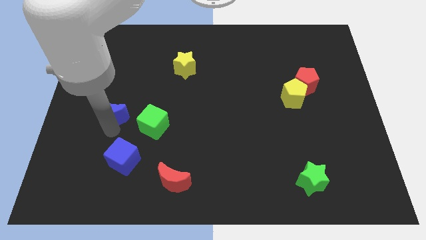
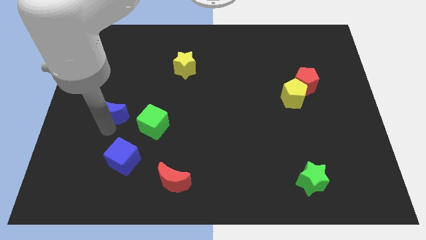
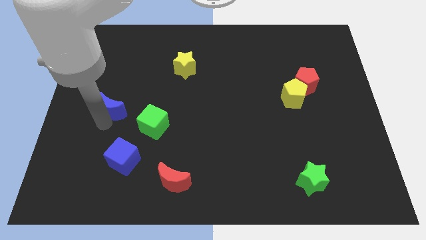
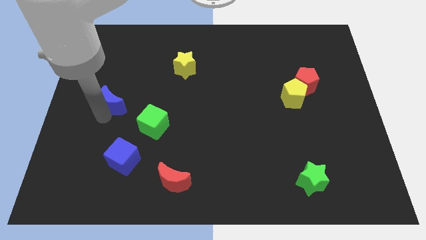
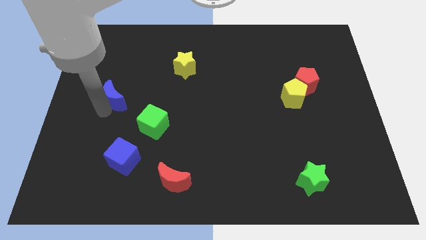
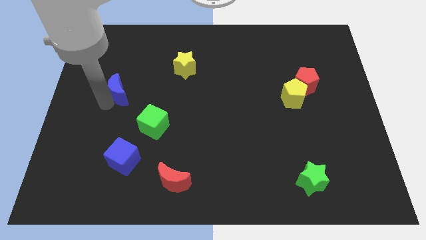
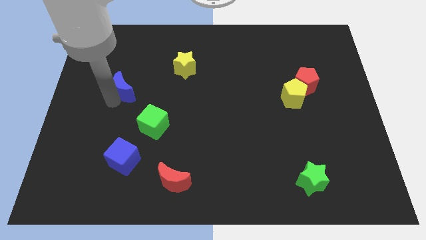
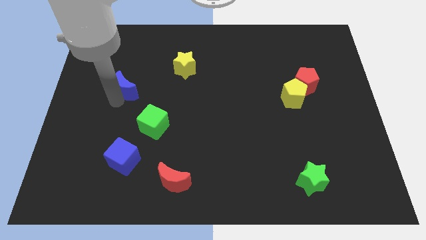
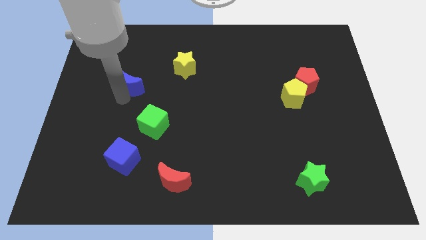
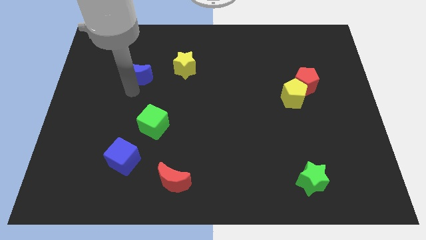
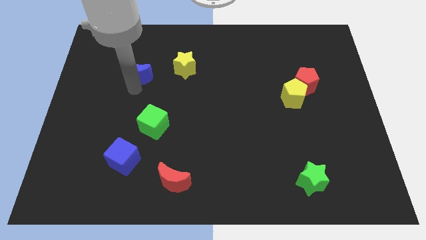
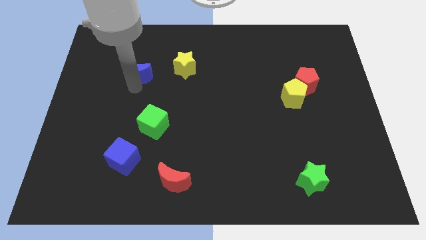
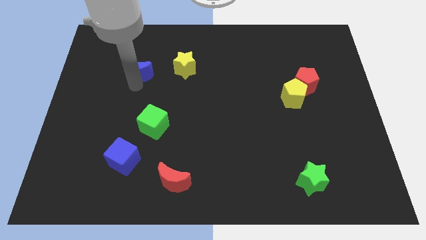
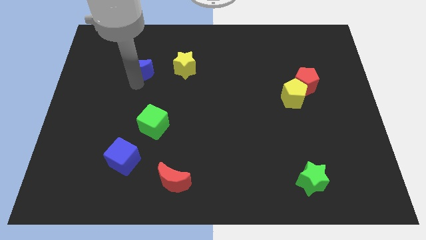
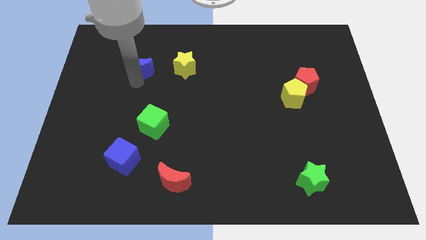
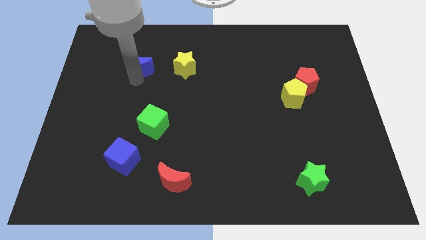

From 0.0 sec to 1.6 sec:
move blue moon to the left of the yellow star

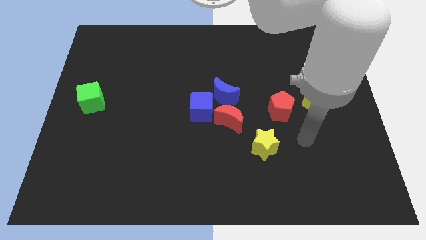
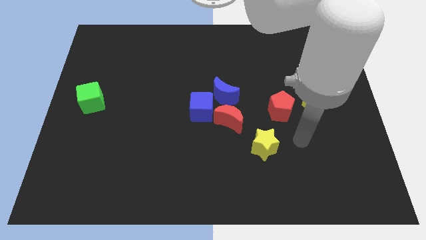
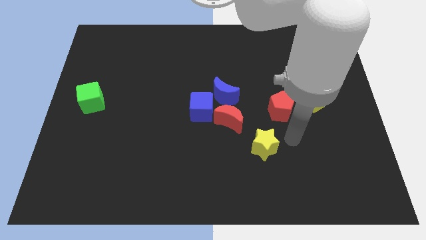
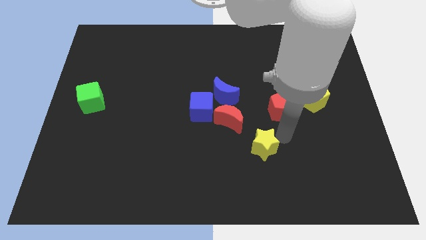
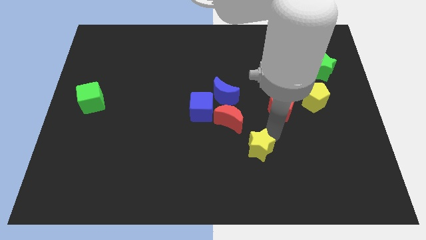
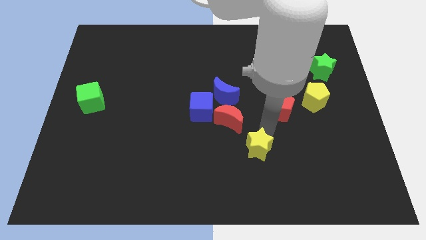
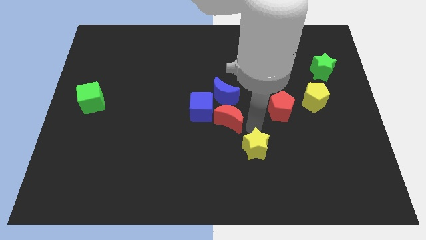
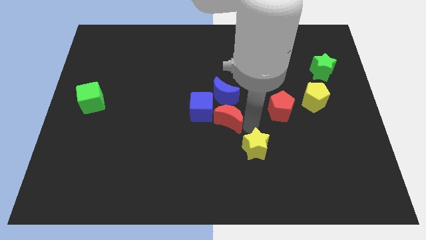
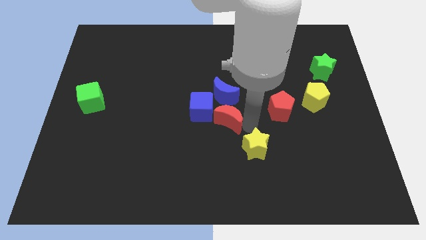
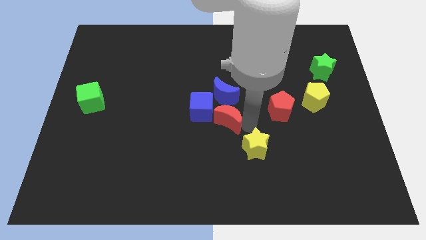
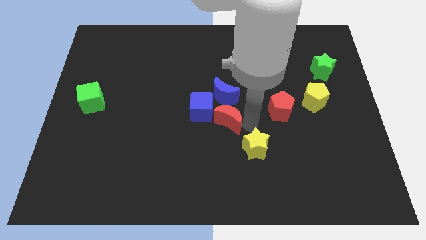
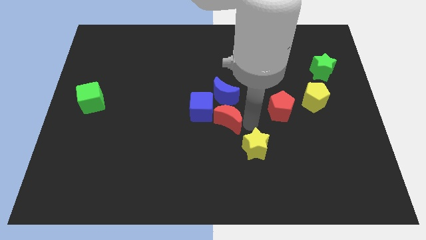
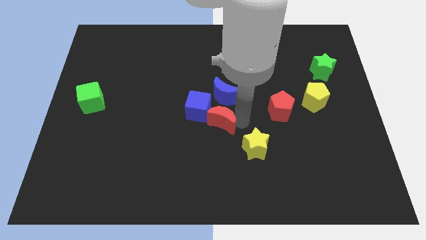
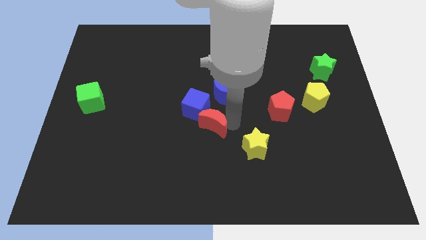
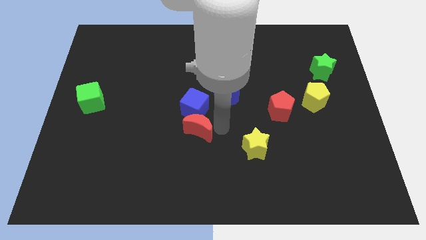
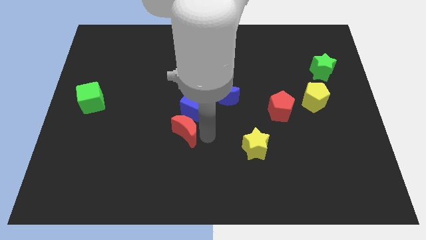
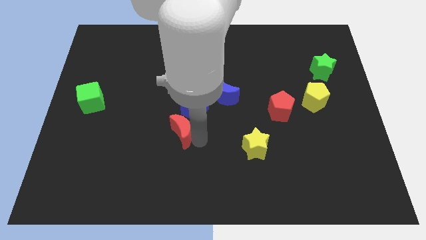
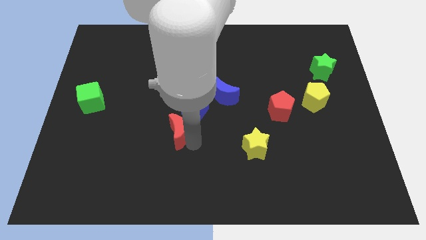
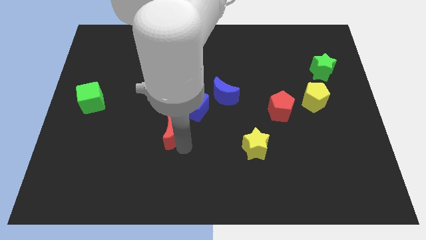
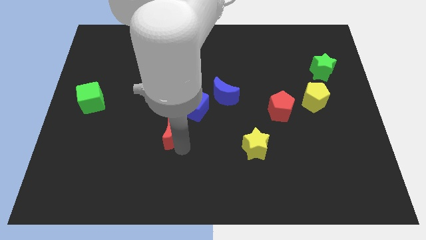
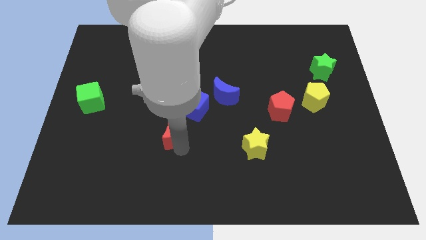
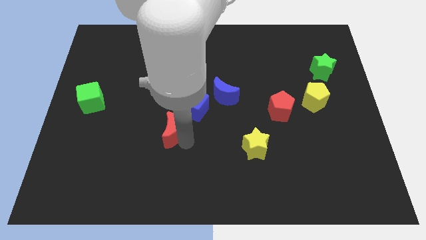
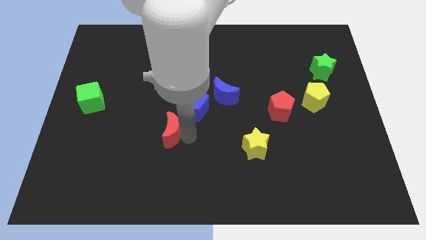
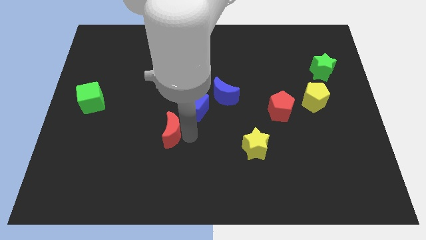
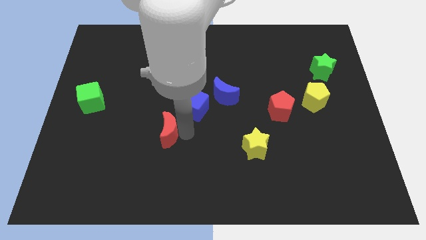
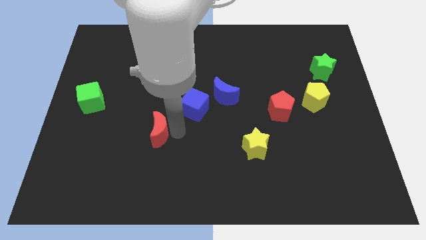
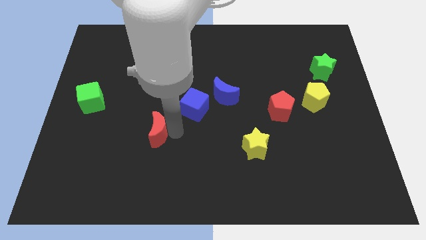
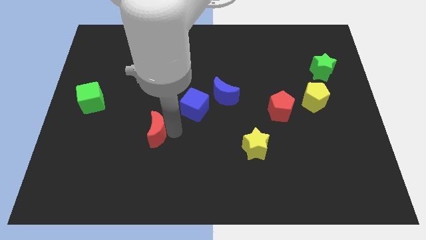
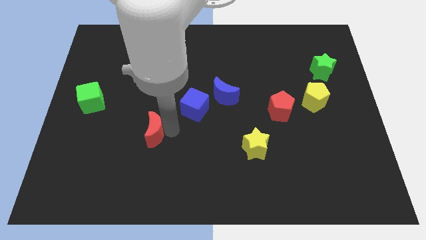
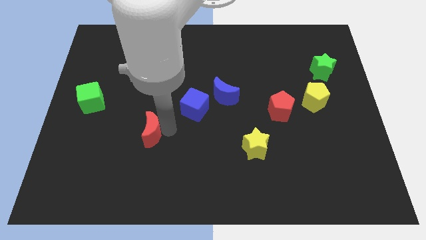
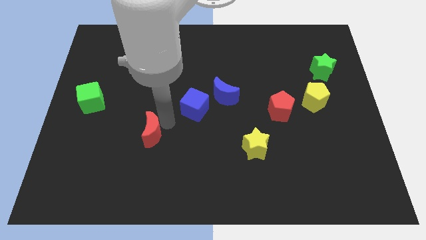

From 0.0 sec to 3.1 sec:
push red crescent slightly towards left

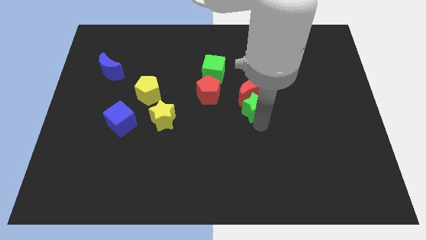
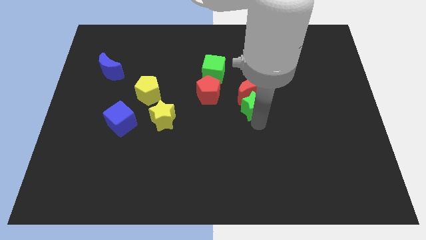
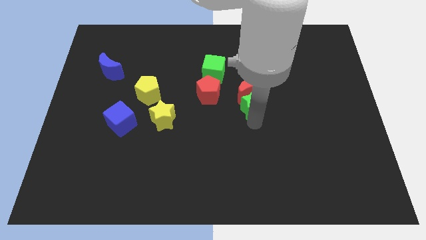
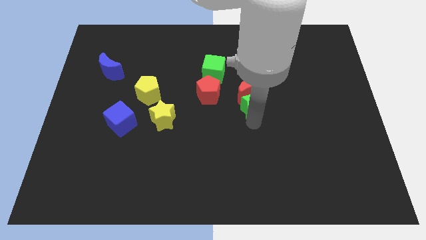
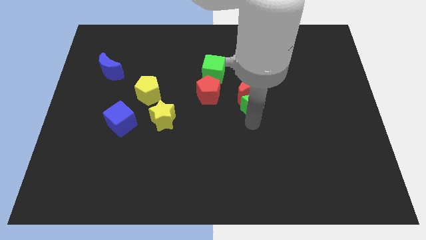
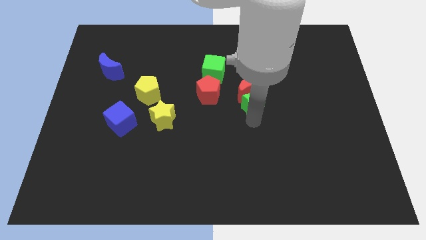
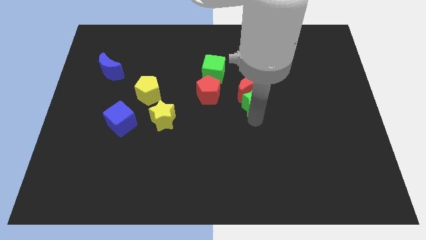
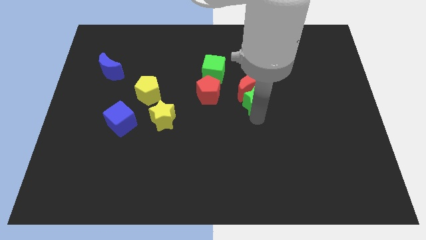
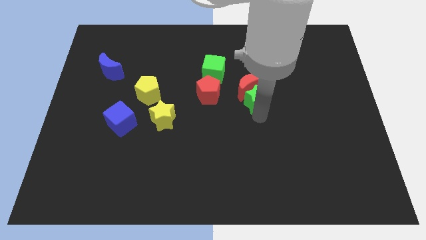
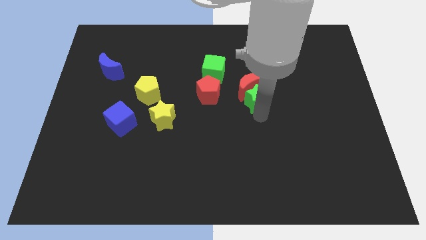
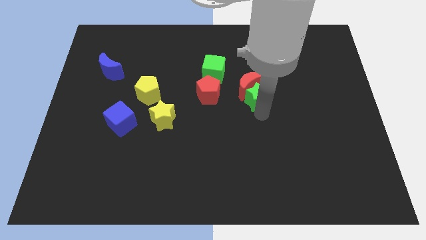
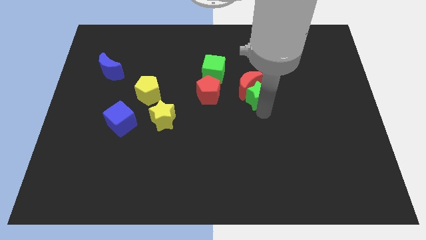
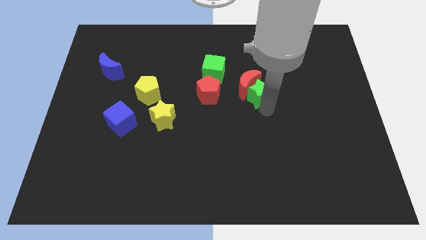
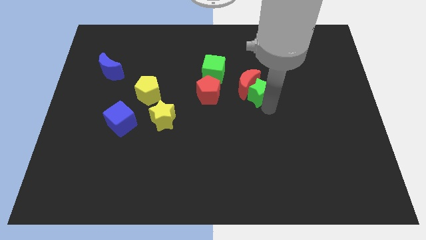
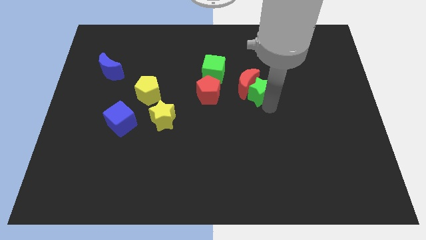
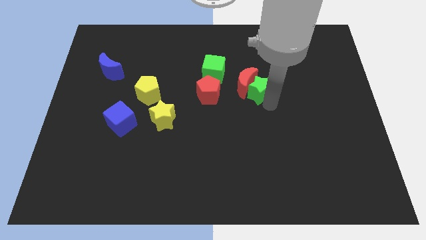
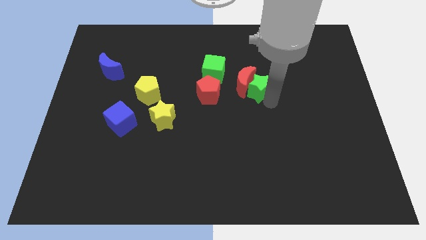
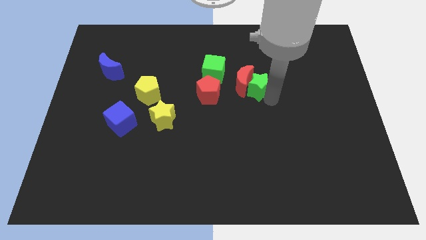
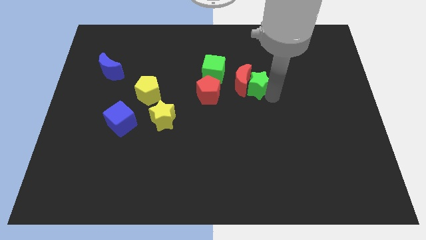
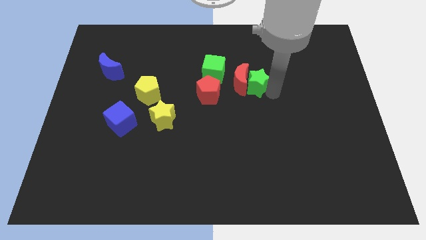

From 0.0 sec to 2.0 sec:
push the red crescent and green star towards the green cube

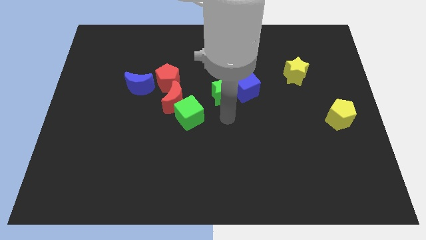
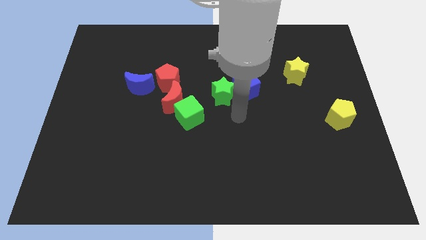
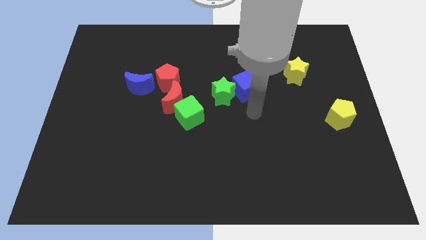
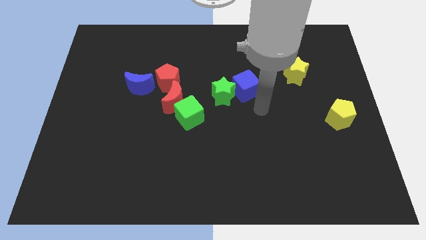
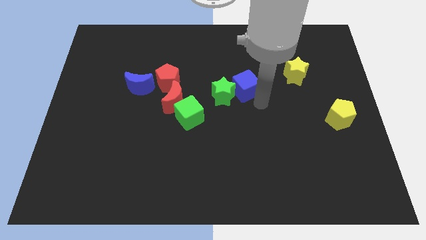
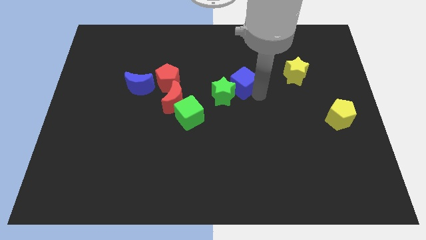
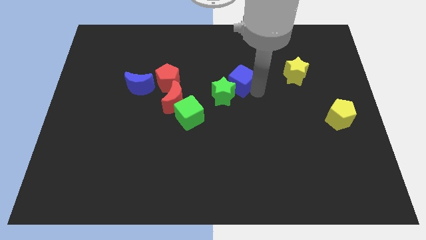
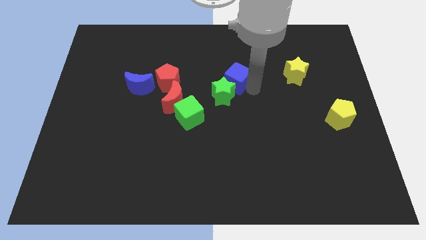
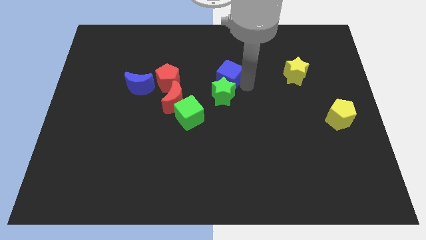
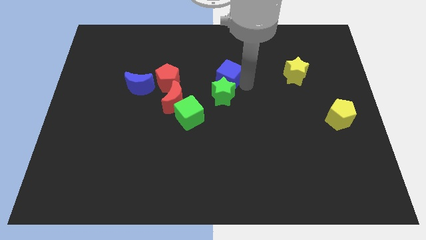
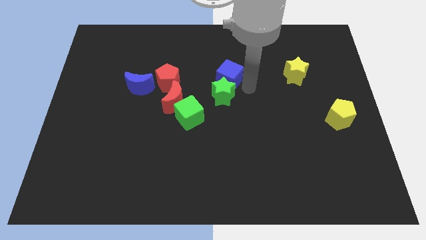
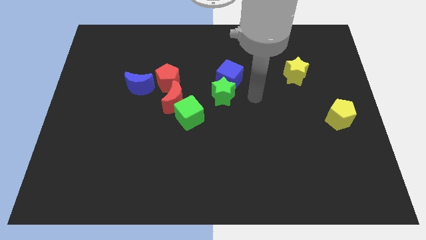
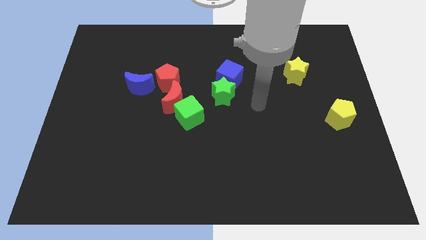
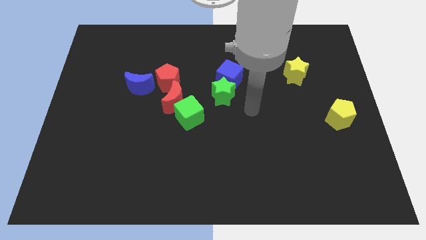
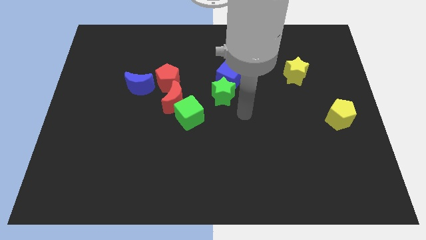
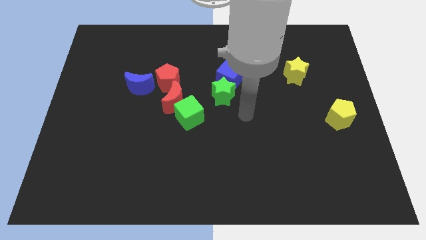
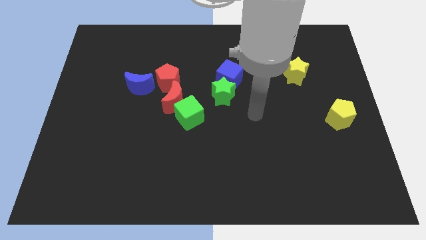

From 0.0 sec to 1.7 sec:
place the blue cube above the green star

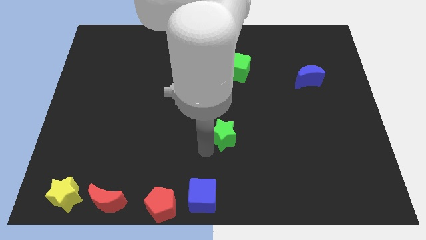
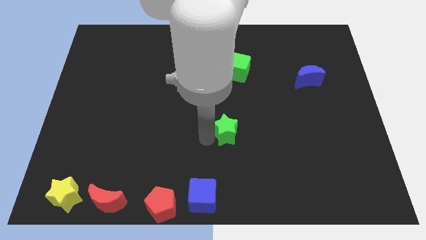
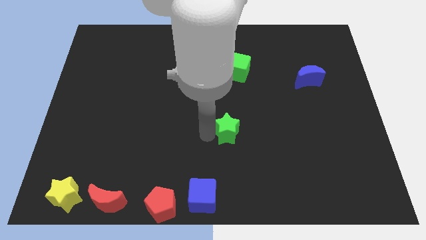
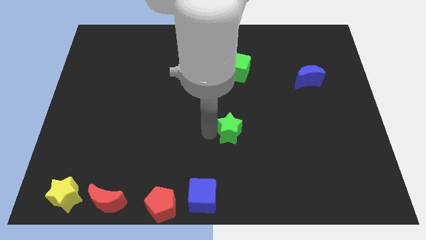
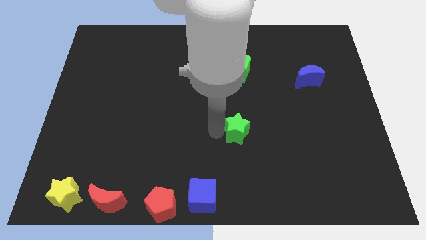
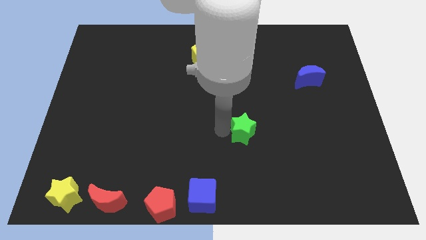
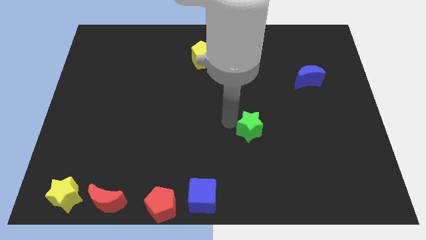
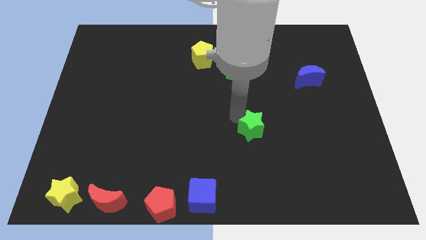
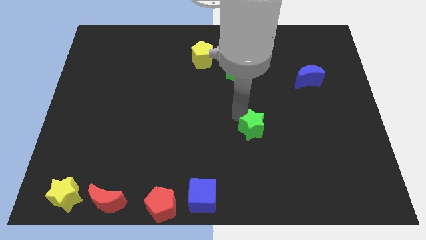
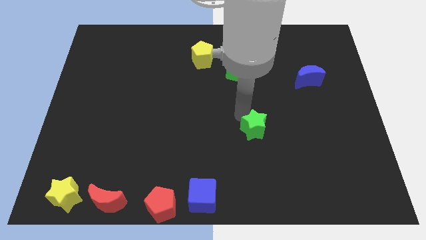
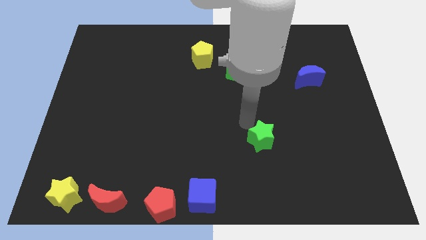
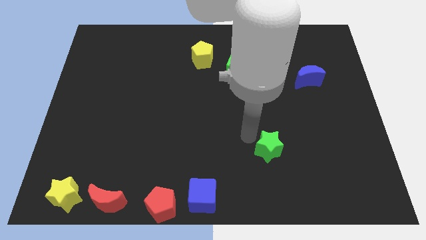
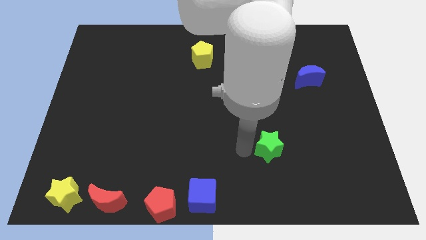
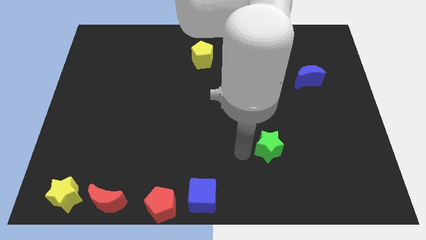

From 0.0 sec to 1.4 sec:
place the green star diagonally to the blue cube
